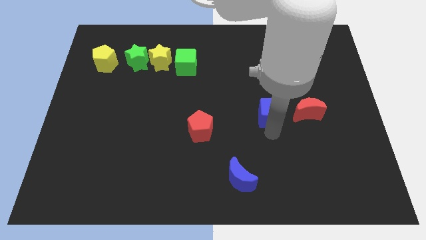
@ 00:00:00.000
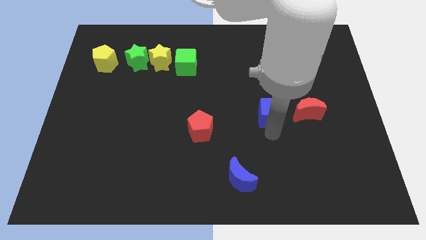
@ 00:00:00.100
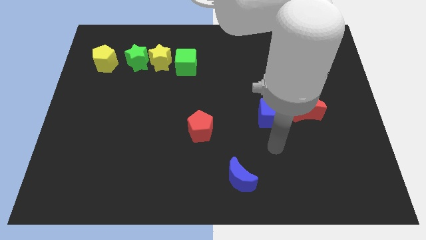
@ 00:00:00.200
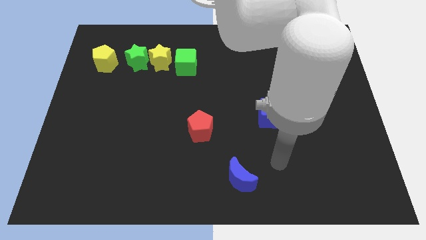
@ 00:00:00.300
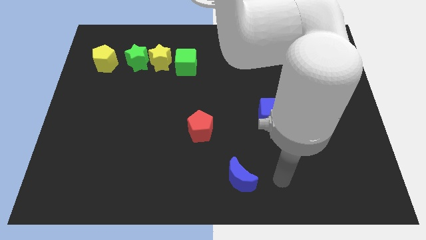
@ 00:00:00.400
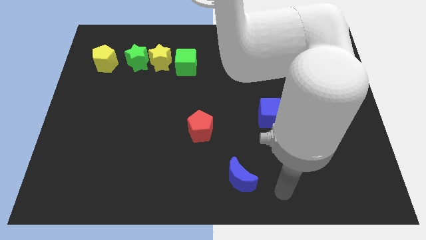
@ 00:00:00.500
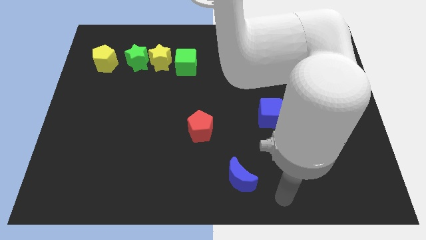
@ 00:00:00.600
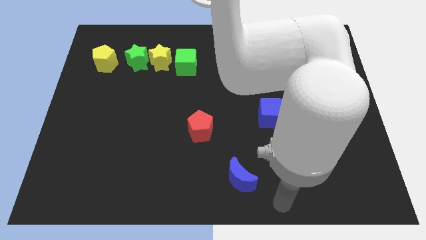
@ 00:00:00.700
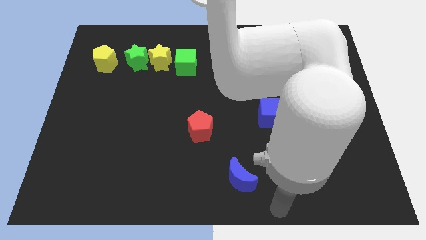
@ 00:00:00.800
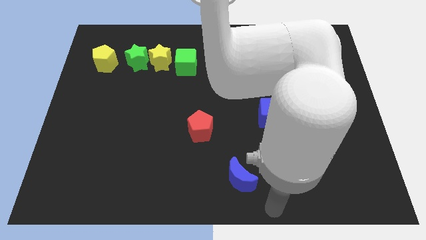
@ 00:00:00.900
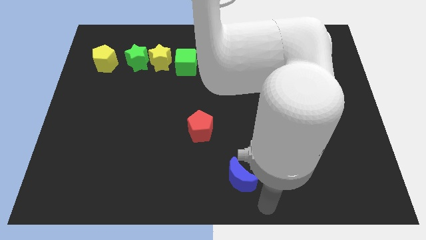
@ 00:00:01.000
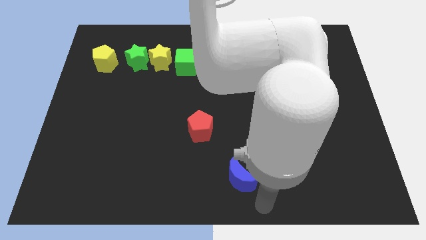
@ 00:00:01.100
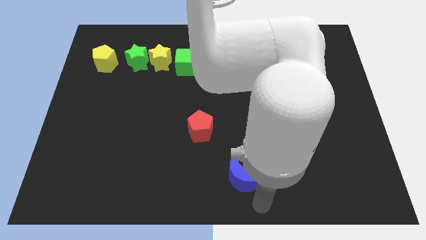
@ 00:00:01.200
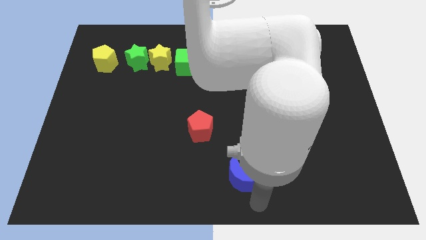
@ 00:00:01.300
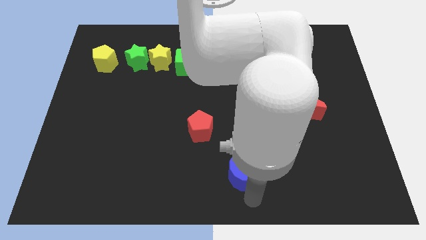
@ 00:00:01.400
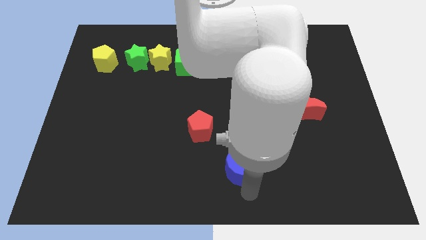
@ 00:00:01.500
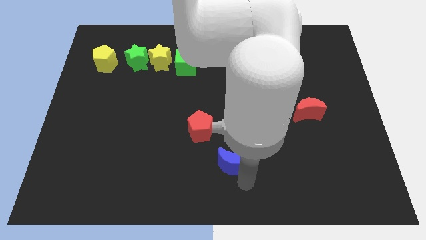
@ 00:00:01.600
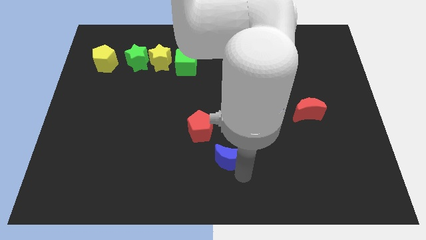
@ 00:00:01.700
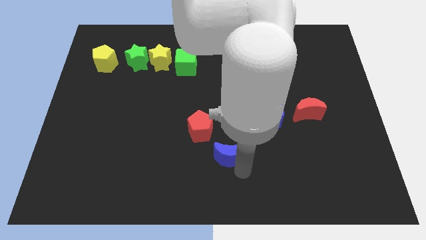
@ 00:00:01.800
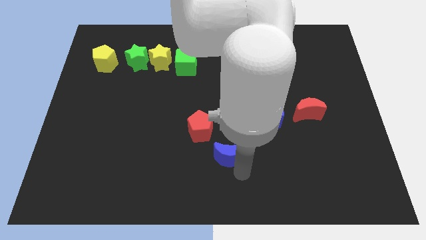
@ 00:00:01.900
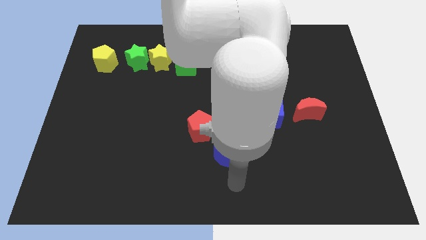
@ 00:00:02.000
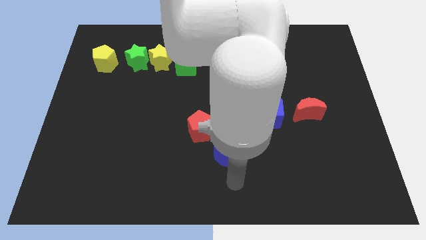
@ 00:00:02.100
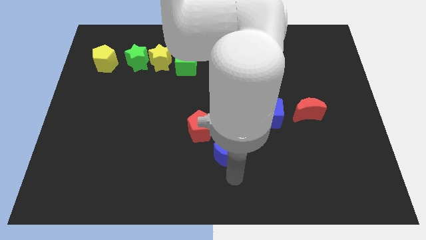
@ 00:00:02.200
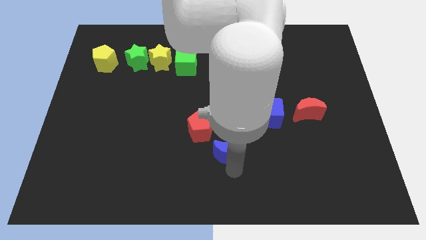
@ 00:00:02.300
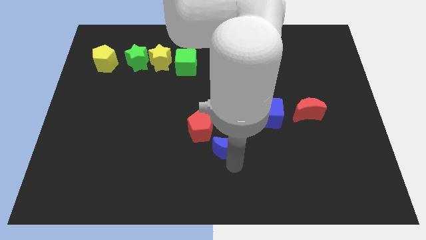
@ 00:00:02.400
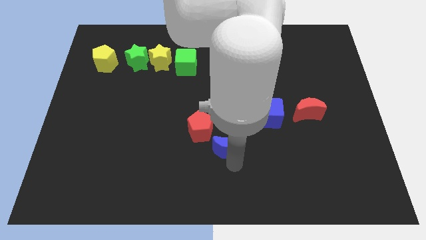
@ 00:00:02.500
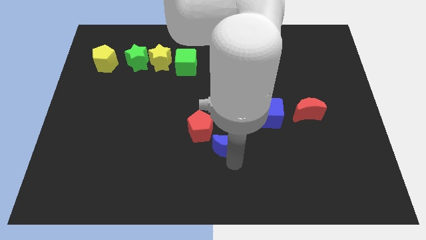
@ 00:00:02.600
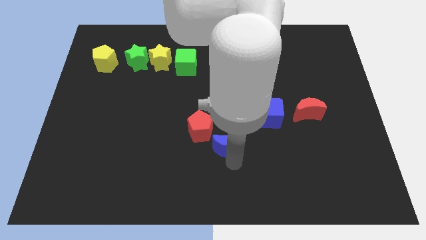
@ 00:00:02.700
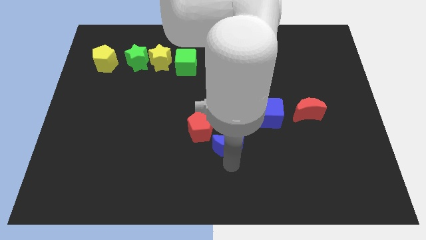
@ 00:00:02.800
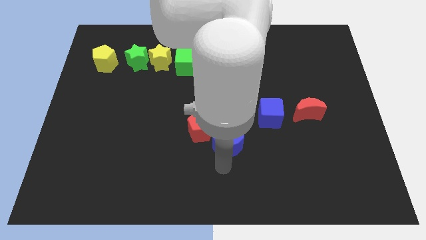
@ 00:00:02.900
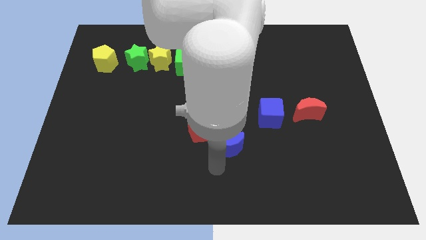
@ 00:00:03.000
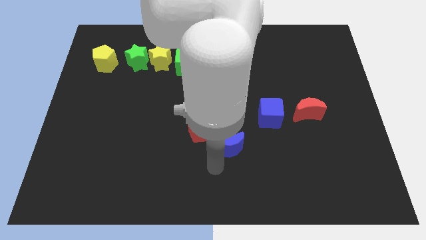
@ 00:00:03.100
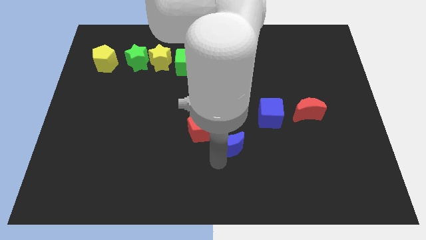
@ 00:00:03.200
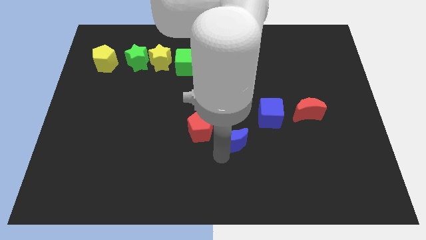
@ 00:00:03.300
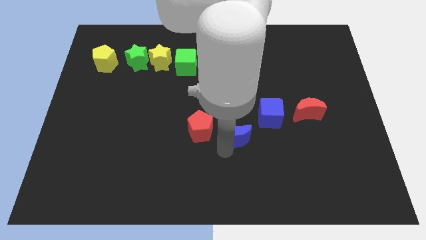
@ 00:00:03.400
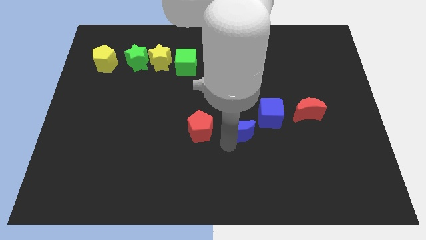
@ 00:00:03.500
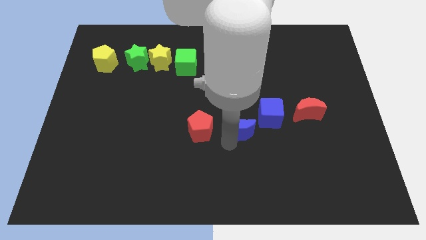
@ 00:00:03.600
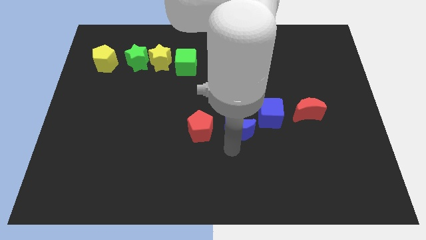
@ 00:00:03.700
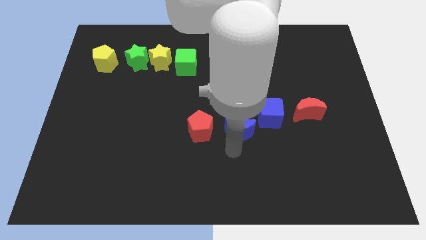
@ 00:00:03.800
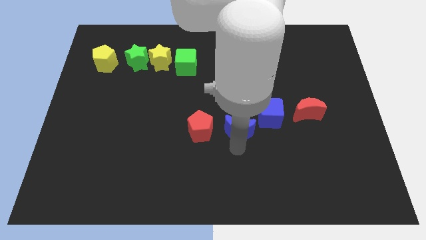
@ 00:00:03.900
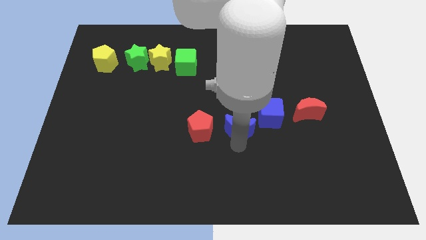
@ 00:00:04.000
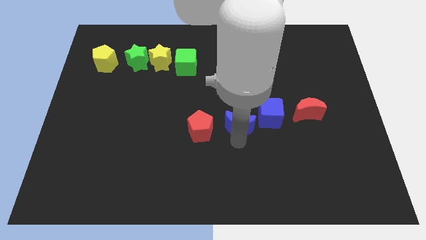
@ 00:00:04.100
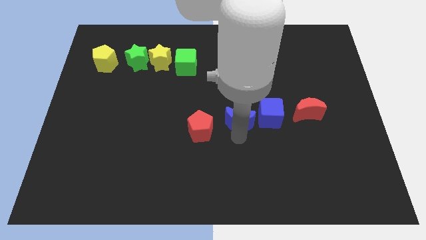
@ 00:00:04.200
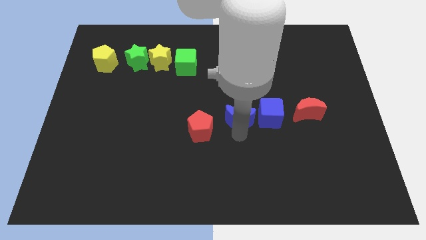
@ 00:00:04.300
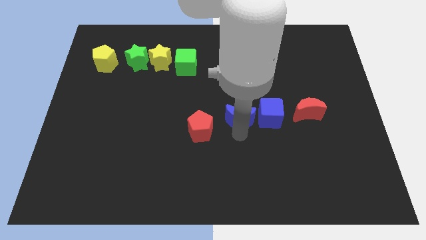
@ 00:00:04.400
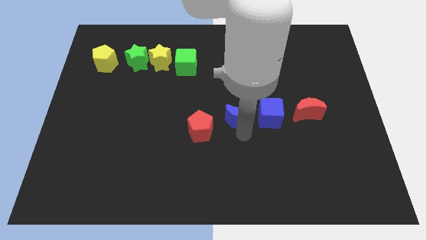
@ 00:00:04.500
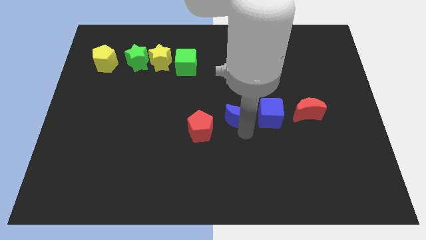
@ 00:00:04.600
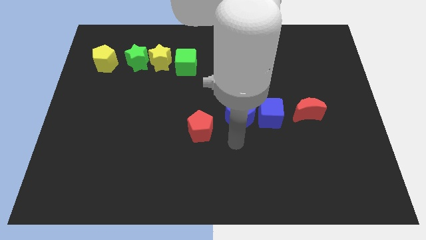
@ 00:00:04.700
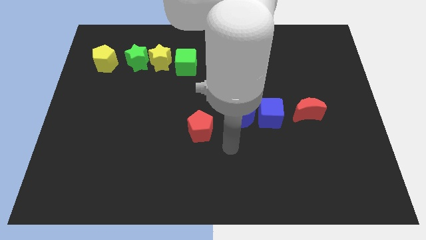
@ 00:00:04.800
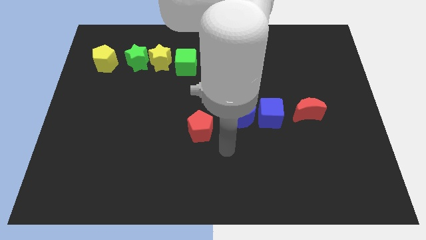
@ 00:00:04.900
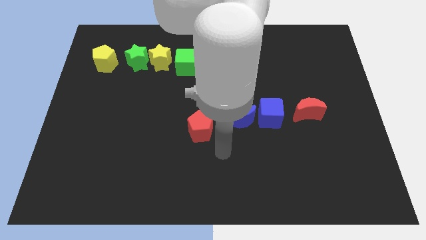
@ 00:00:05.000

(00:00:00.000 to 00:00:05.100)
place the blue moon in between blue cube and red pentagon

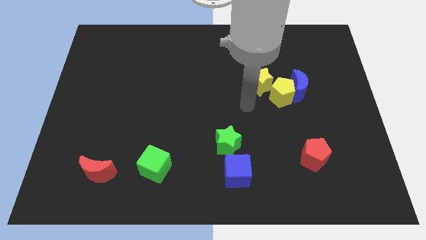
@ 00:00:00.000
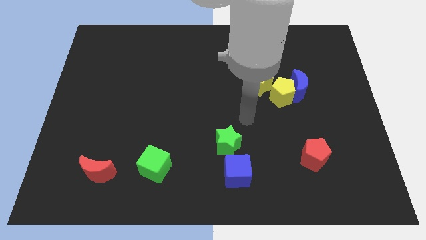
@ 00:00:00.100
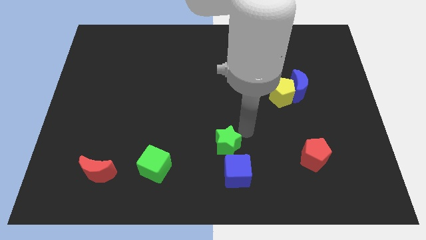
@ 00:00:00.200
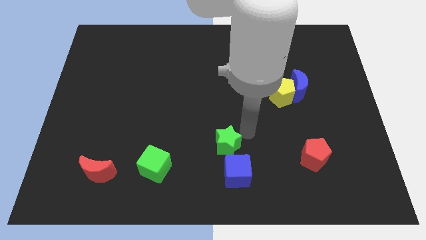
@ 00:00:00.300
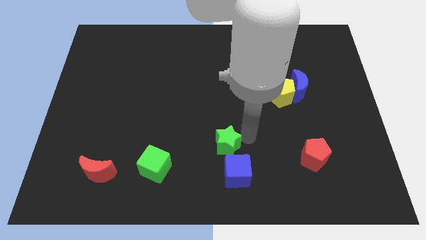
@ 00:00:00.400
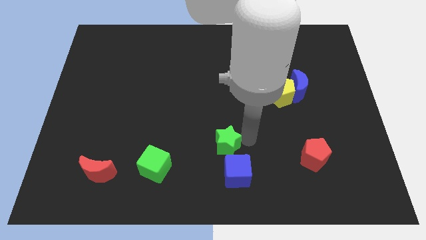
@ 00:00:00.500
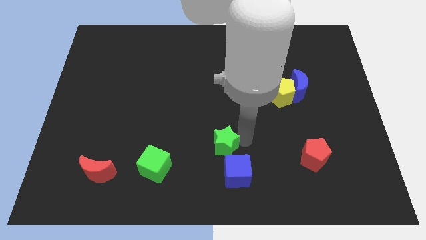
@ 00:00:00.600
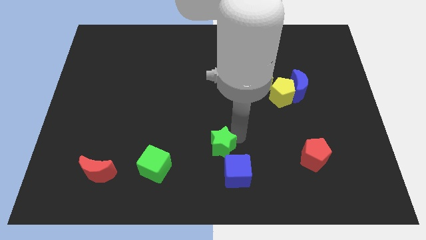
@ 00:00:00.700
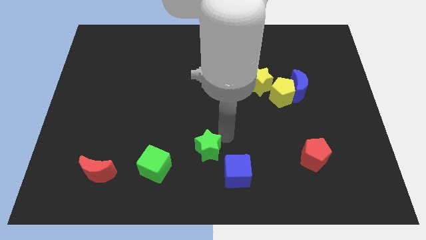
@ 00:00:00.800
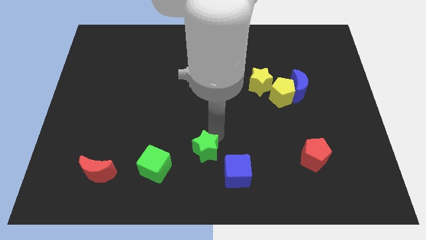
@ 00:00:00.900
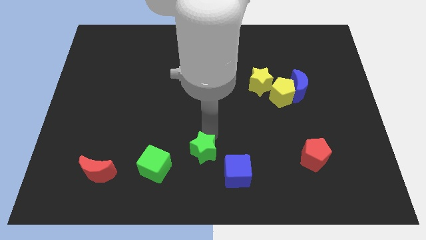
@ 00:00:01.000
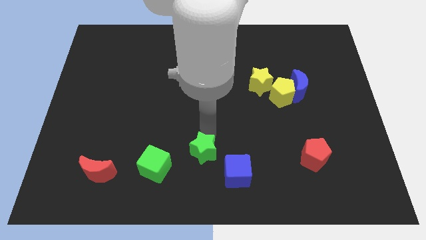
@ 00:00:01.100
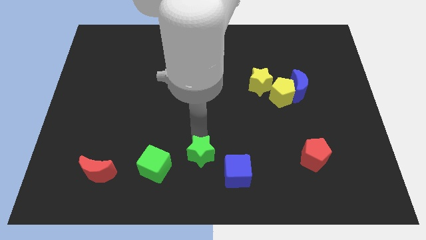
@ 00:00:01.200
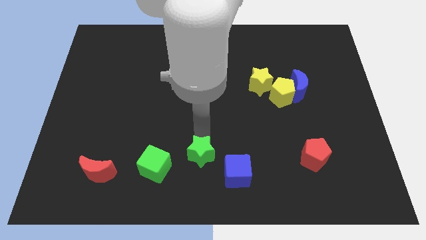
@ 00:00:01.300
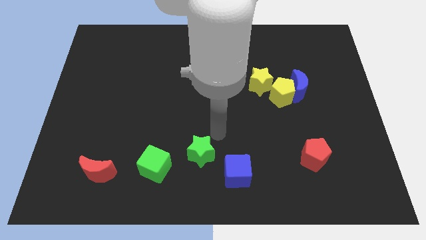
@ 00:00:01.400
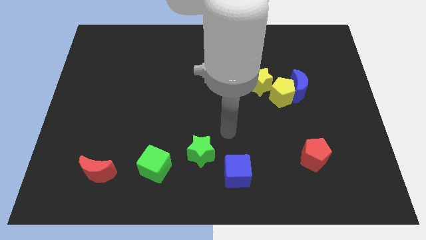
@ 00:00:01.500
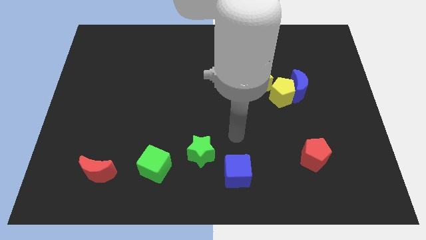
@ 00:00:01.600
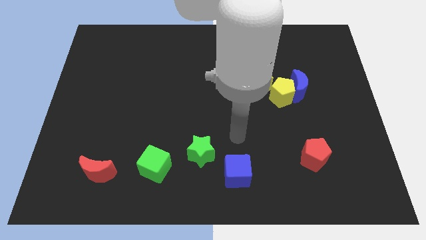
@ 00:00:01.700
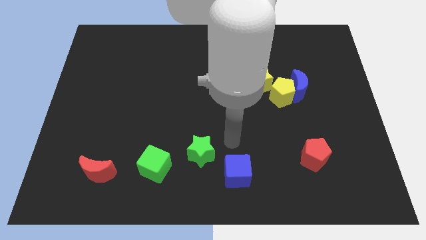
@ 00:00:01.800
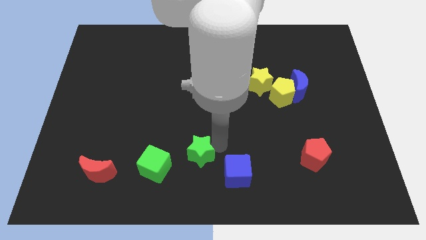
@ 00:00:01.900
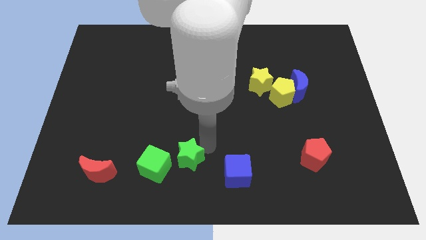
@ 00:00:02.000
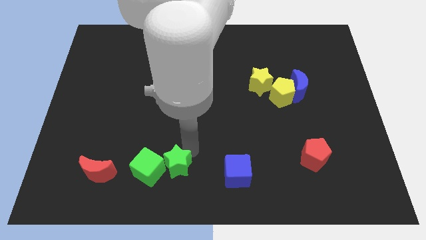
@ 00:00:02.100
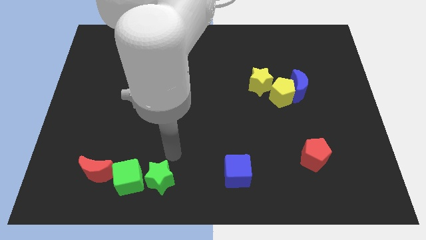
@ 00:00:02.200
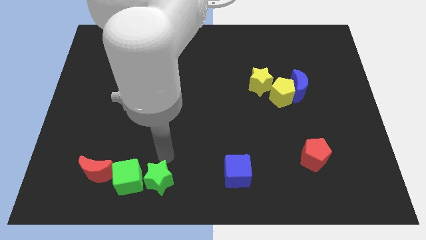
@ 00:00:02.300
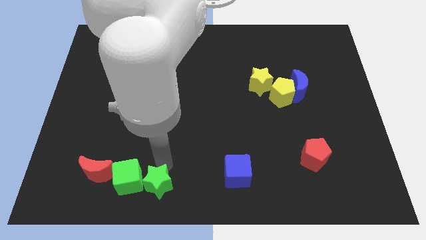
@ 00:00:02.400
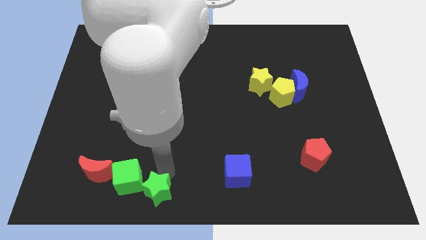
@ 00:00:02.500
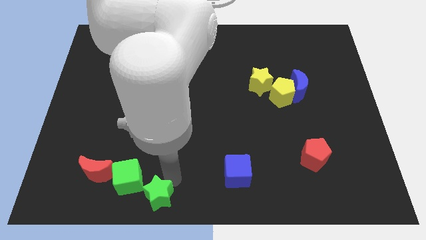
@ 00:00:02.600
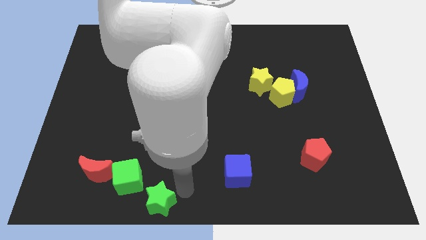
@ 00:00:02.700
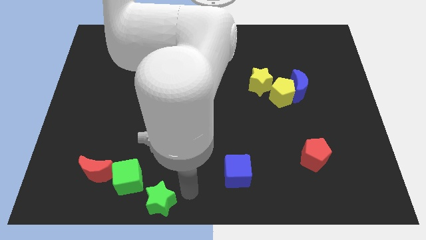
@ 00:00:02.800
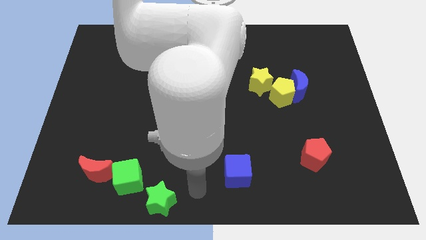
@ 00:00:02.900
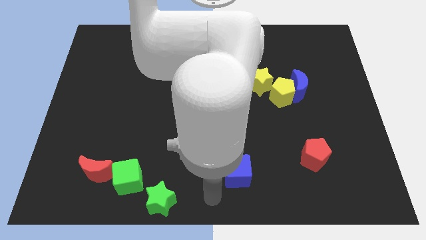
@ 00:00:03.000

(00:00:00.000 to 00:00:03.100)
place the green objects at the right side of the red moon

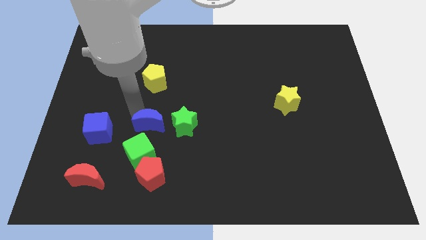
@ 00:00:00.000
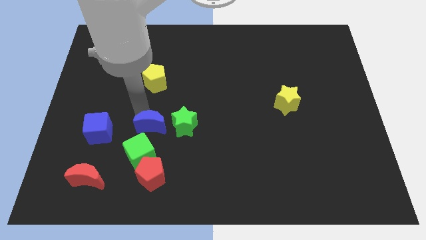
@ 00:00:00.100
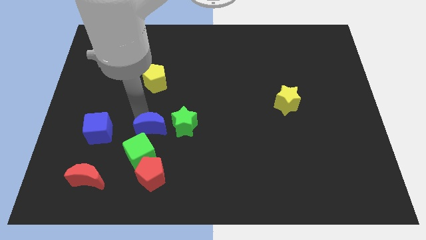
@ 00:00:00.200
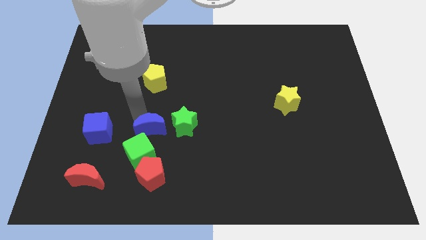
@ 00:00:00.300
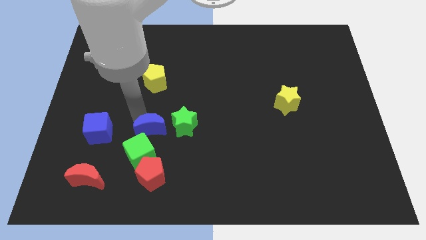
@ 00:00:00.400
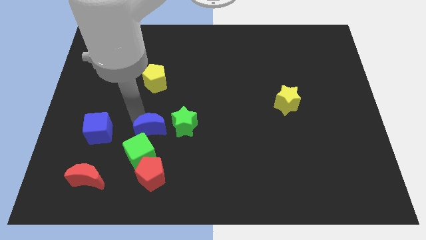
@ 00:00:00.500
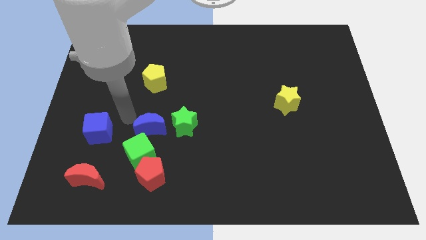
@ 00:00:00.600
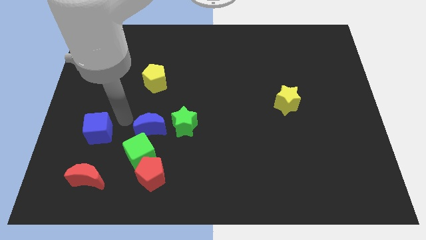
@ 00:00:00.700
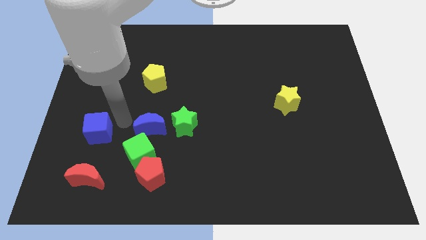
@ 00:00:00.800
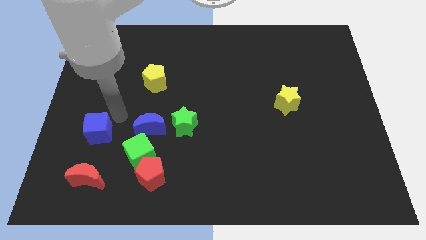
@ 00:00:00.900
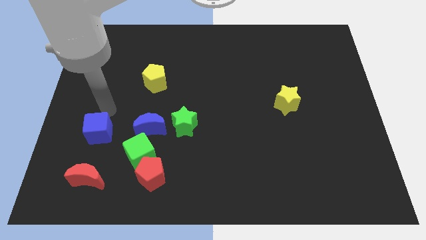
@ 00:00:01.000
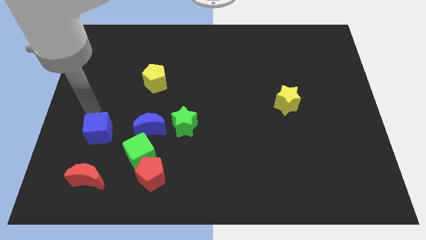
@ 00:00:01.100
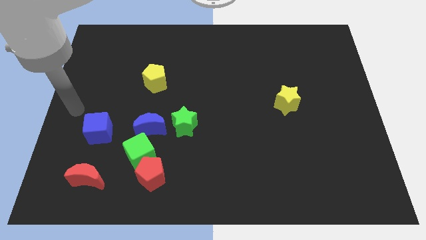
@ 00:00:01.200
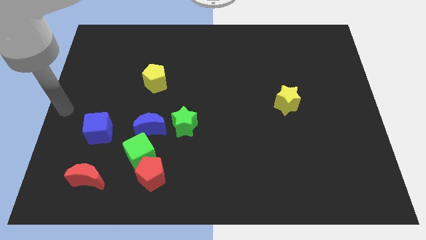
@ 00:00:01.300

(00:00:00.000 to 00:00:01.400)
move blue moon slightly down
